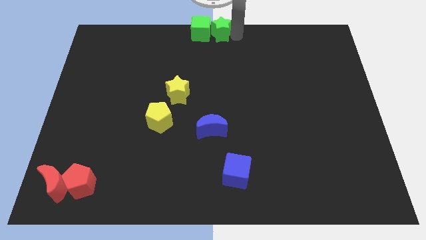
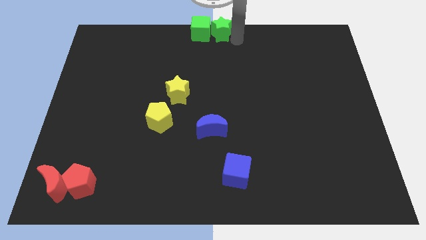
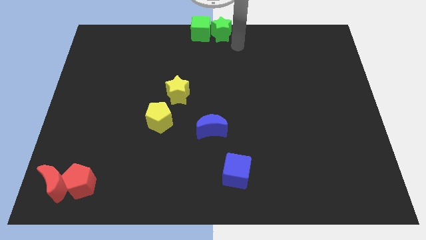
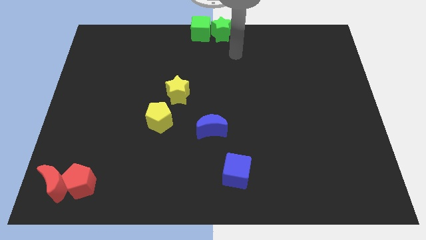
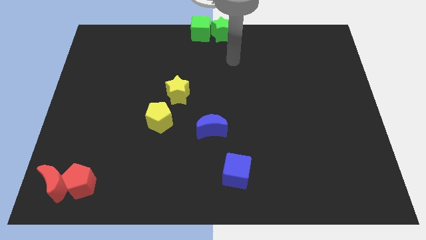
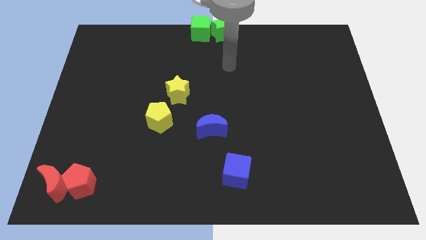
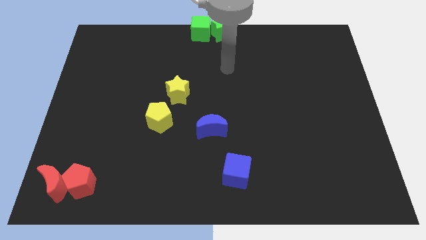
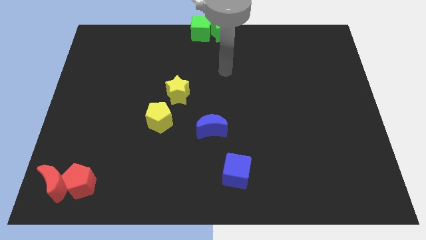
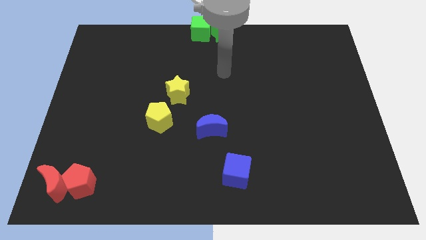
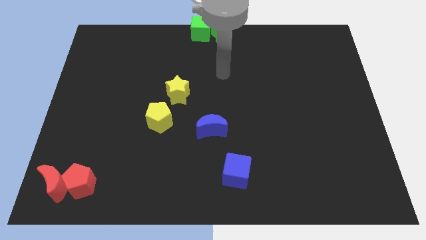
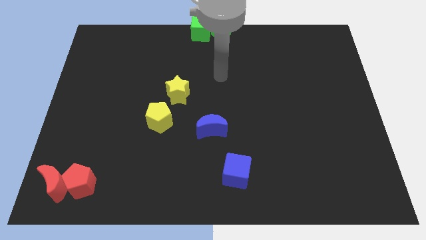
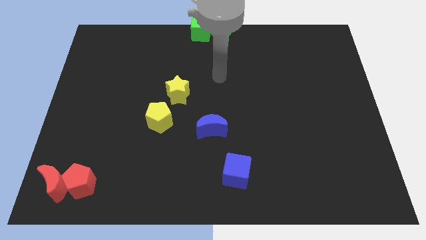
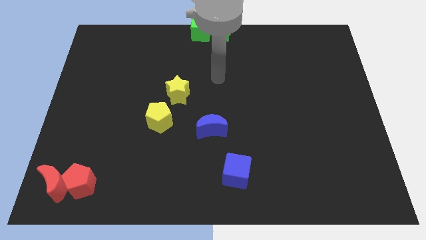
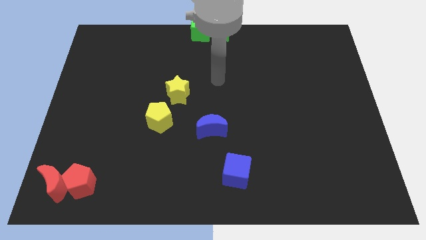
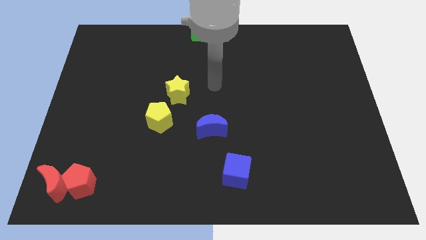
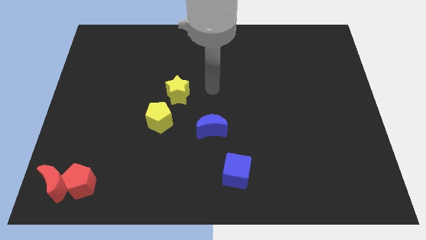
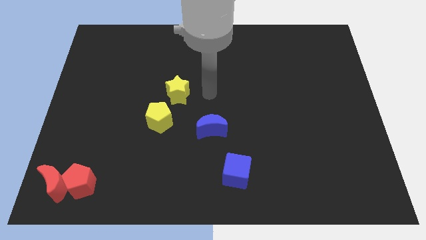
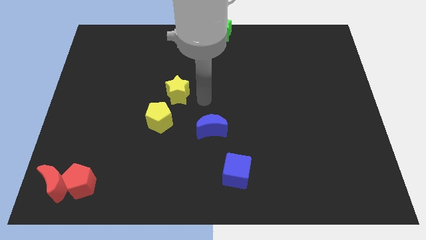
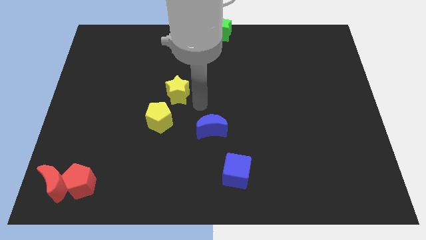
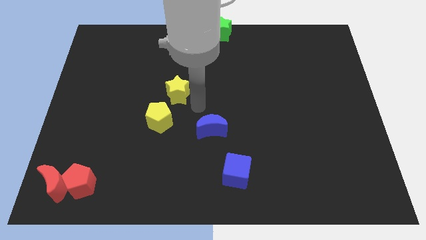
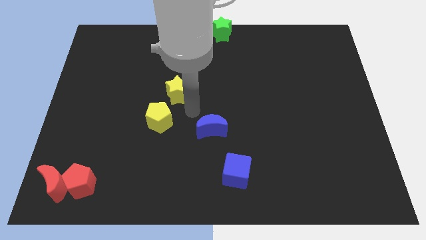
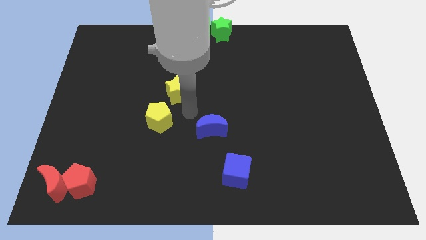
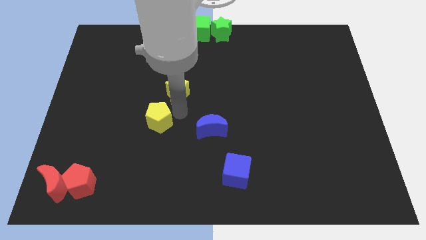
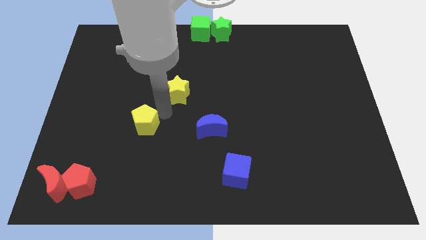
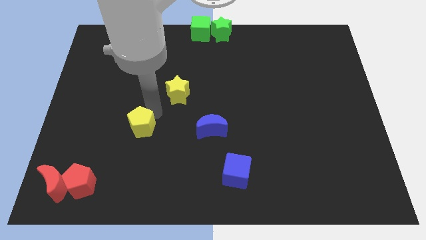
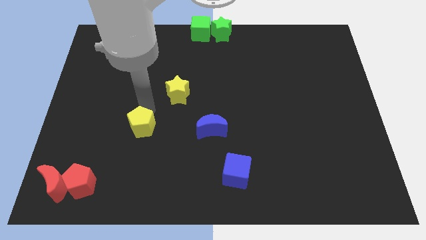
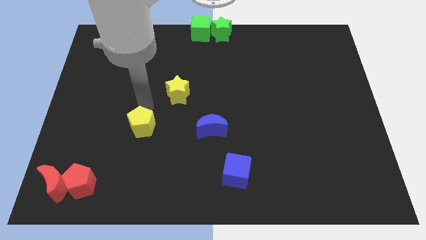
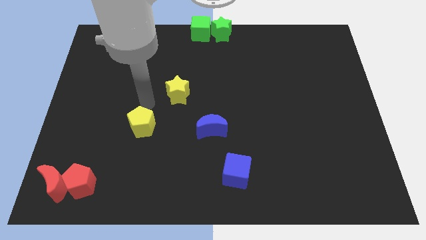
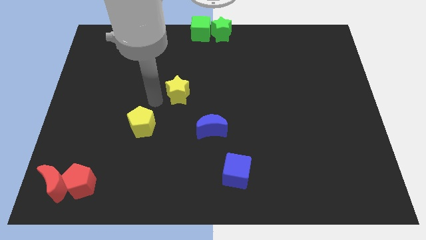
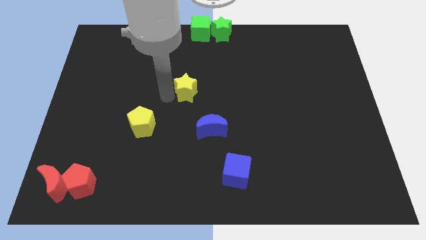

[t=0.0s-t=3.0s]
slightly move down the yellow pentagon

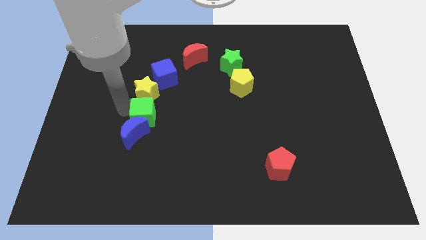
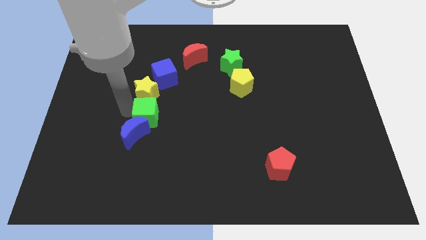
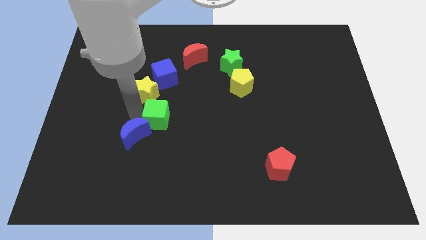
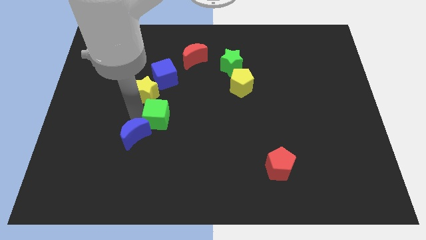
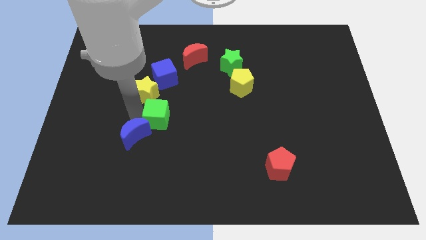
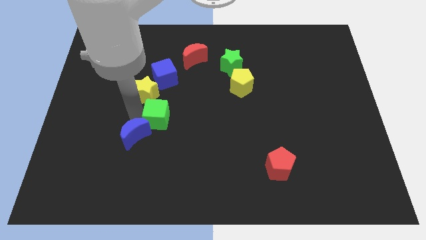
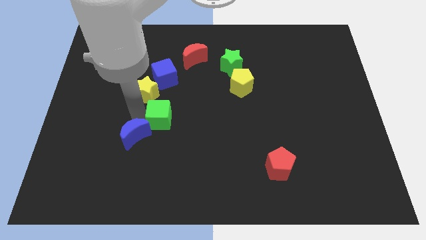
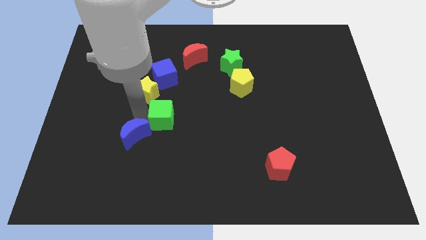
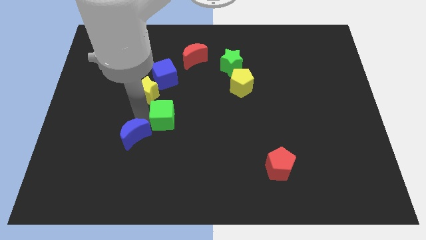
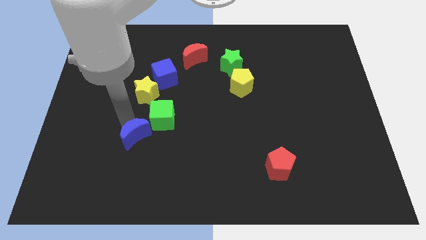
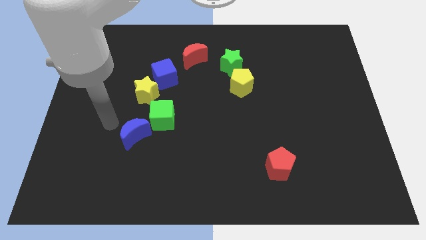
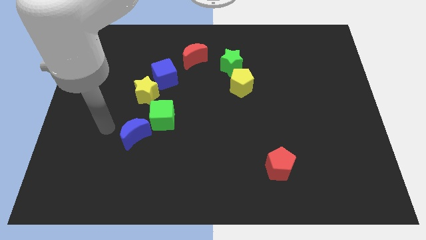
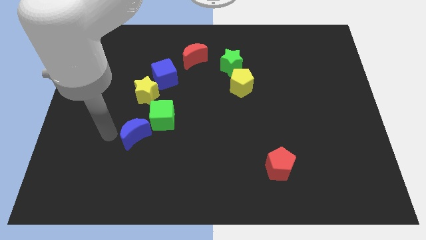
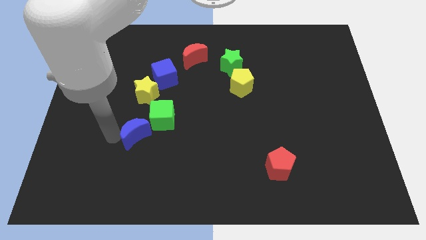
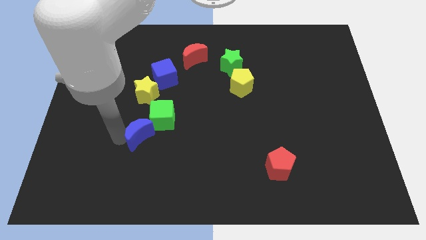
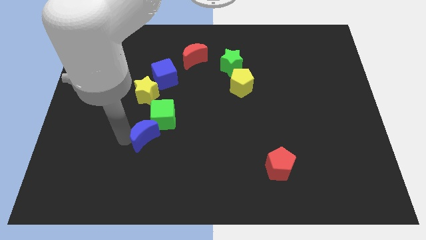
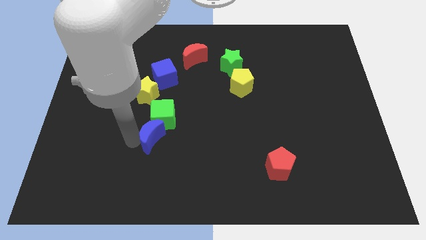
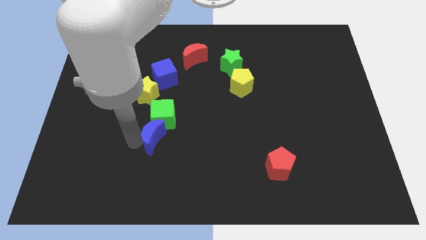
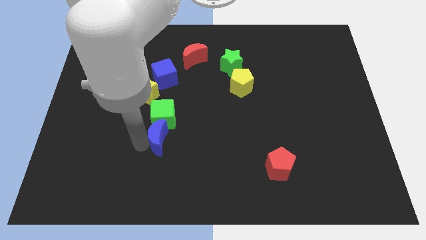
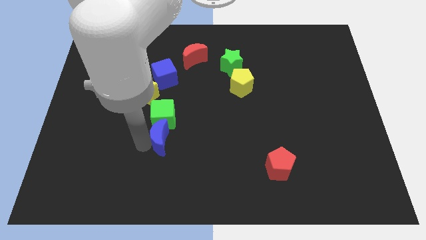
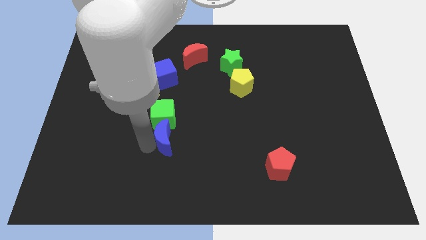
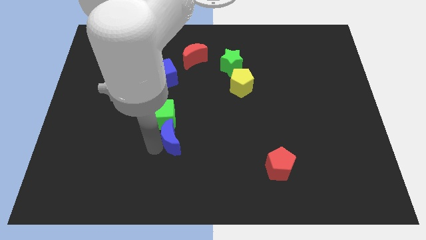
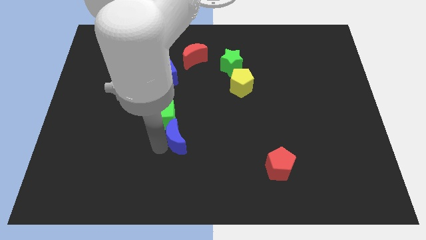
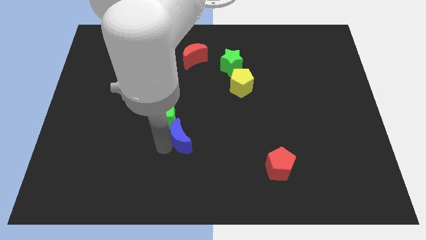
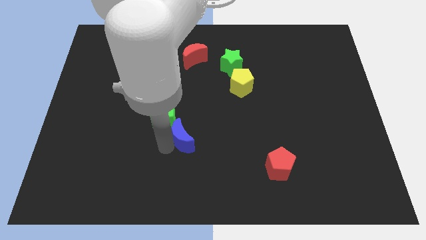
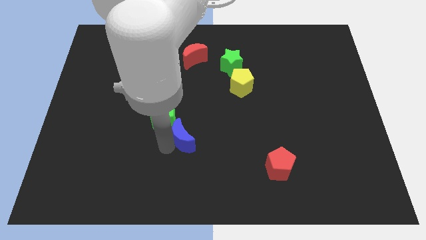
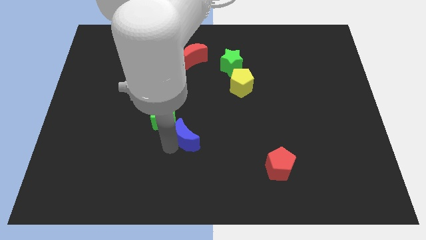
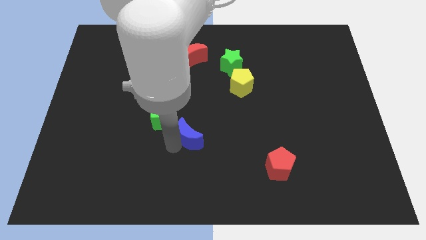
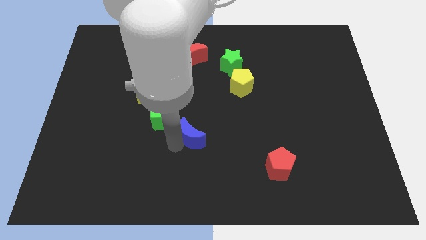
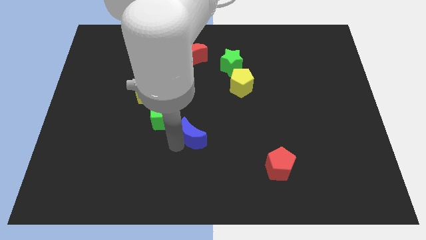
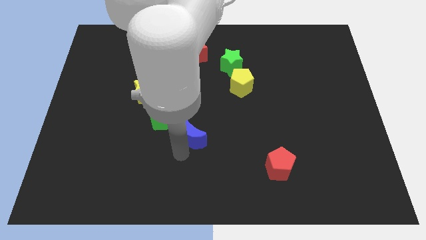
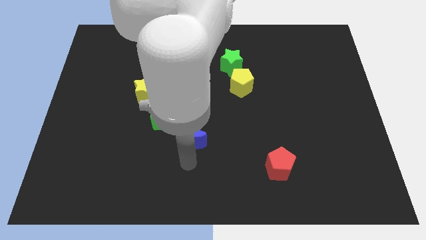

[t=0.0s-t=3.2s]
move the blue moon to the bottom right side of the green cube

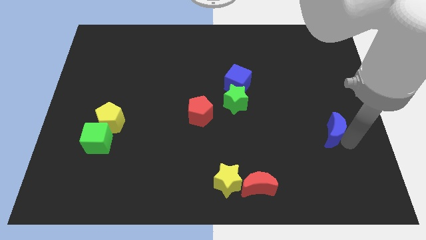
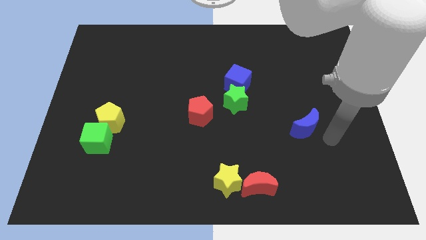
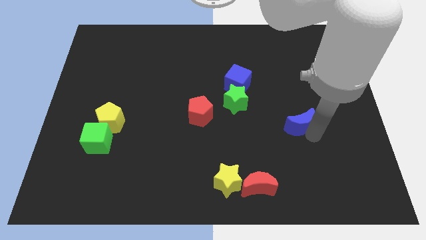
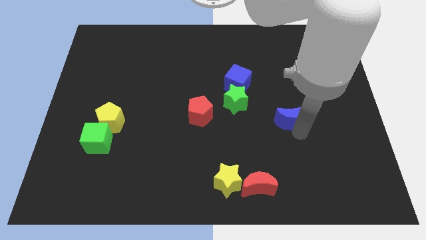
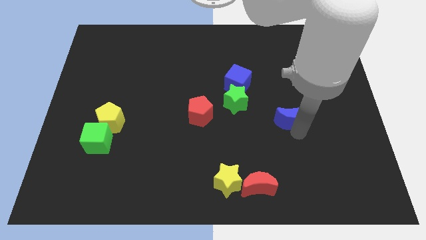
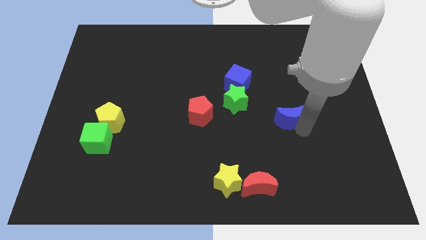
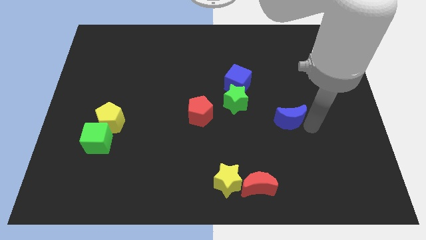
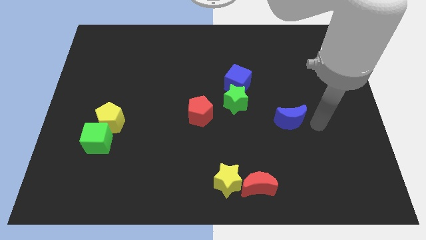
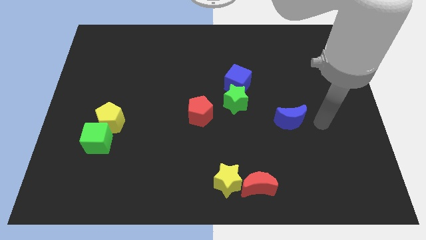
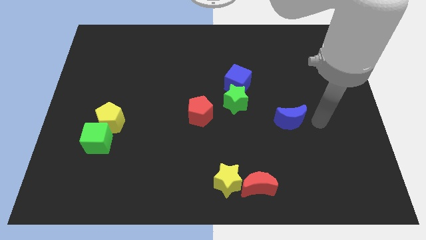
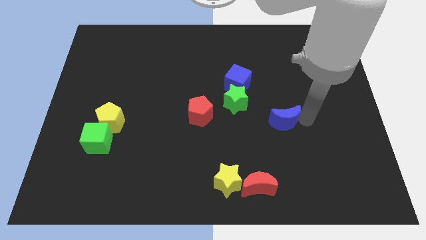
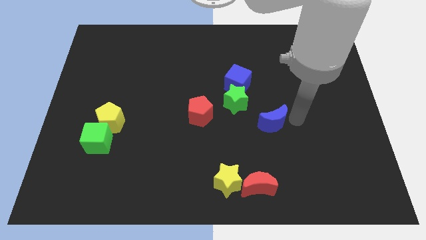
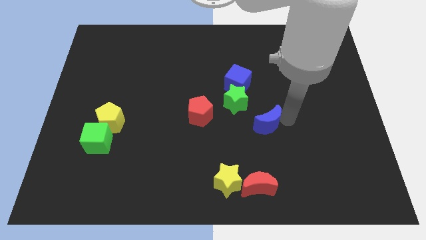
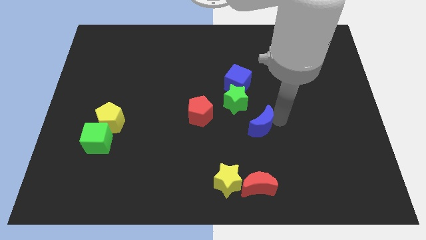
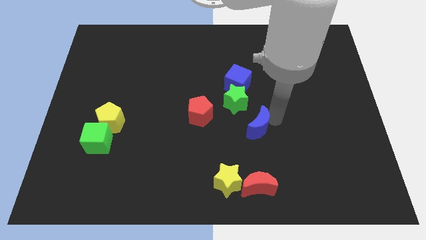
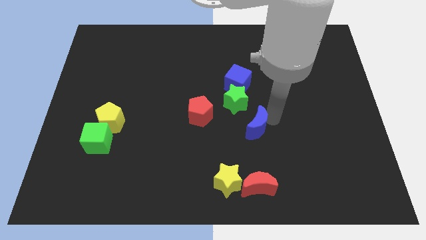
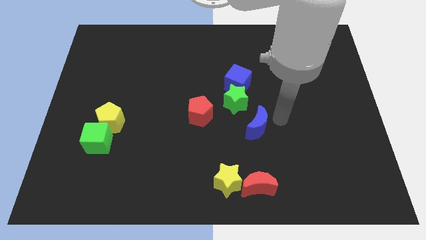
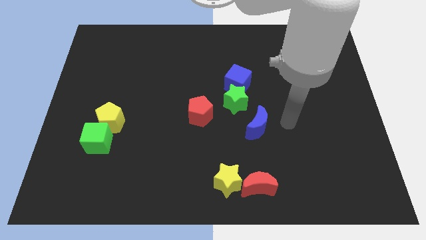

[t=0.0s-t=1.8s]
move the blue crescent near the green star

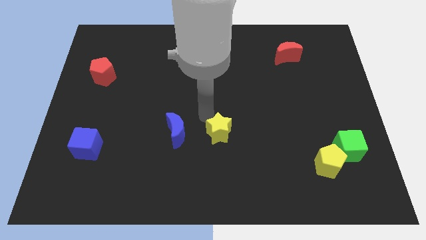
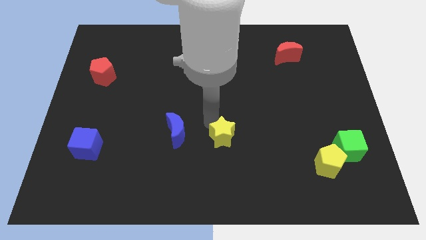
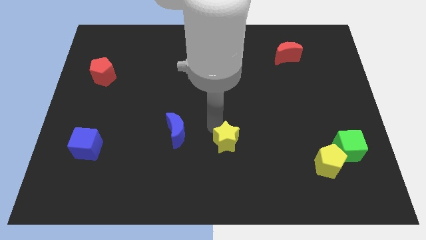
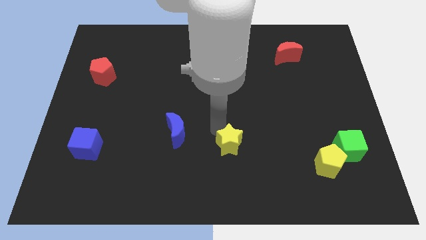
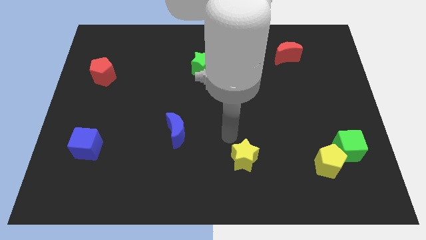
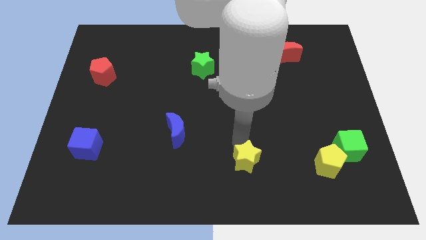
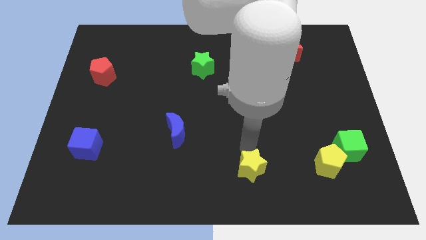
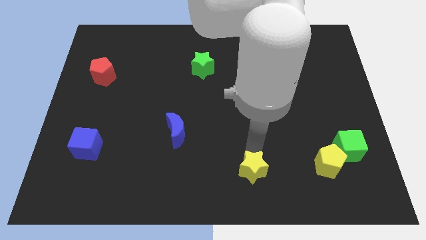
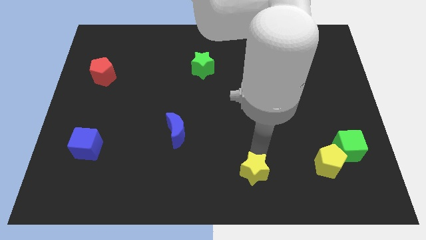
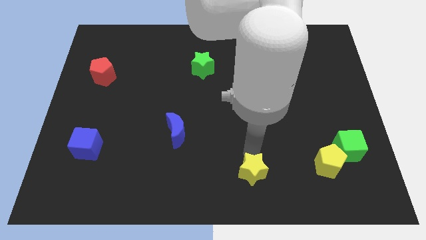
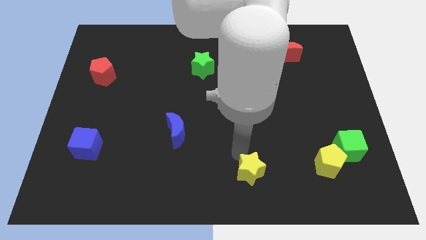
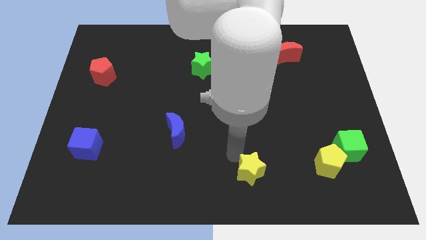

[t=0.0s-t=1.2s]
move the yellow star to the bottom of the board
